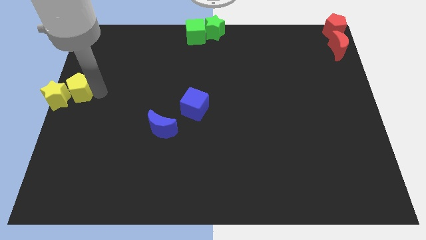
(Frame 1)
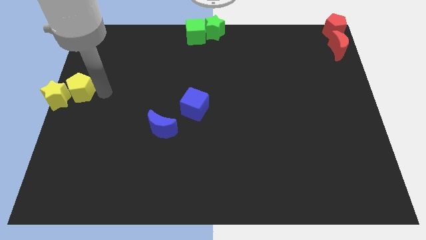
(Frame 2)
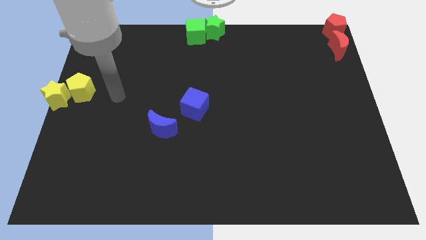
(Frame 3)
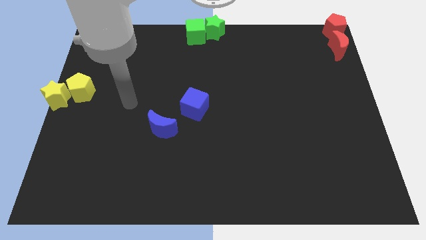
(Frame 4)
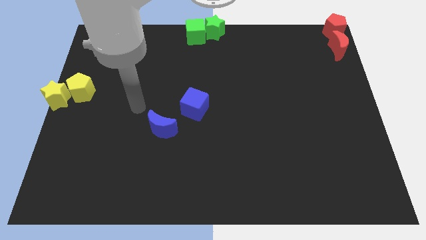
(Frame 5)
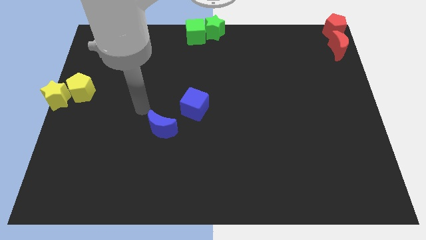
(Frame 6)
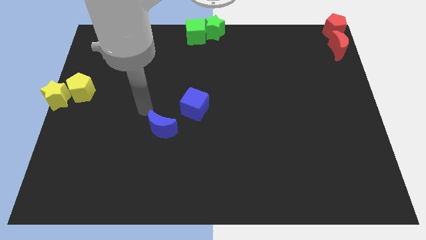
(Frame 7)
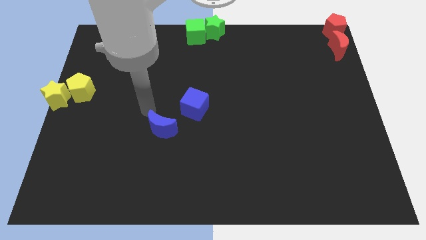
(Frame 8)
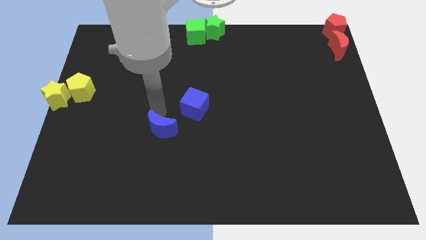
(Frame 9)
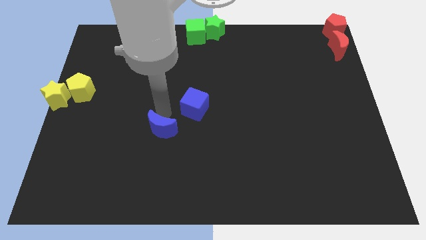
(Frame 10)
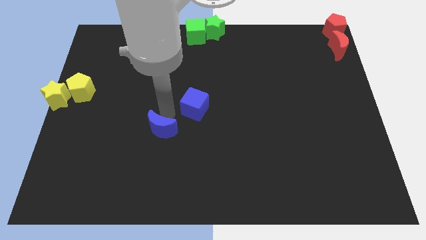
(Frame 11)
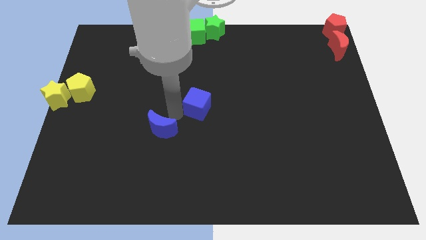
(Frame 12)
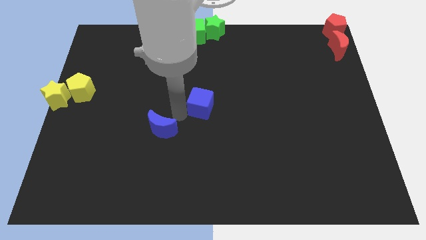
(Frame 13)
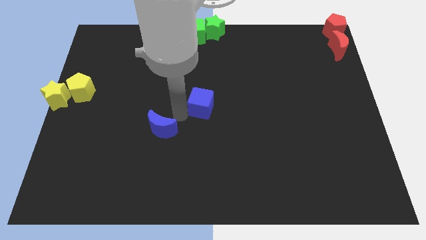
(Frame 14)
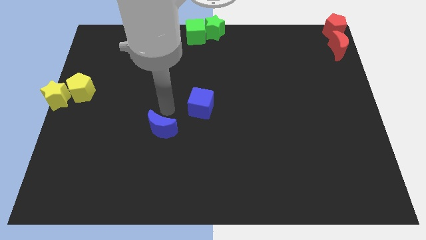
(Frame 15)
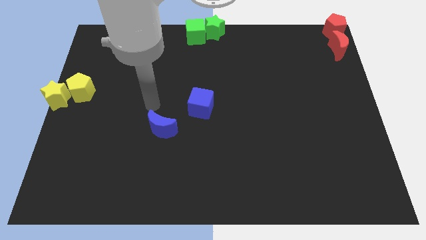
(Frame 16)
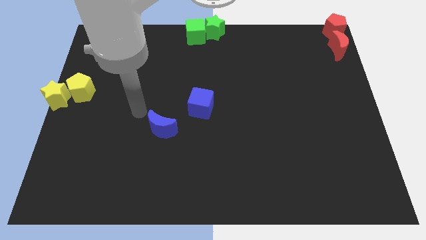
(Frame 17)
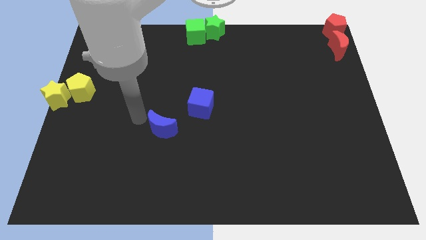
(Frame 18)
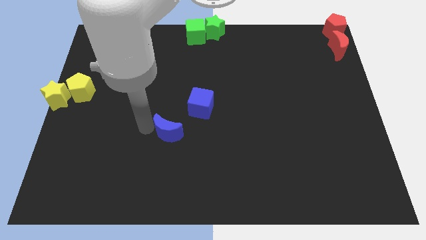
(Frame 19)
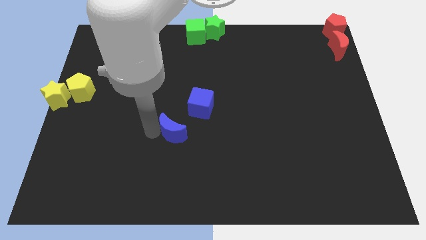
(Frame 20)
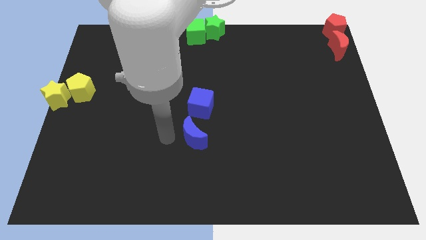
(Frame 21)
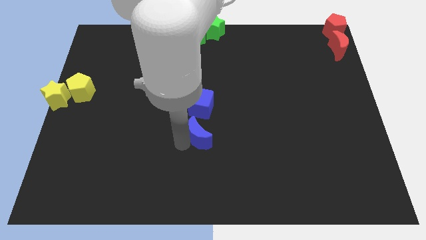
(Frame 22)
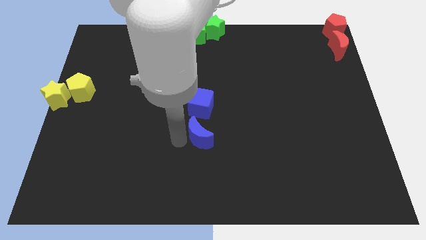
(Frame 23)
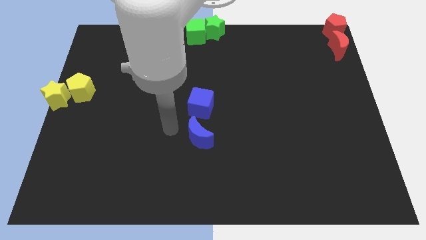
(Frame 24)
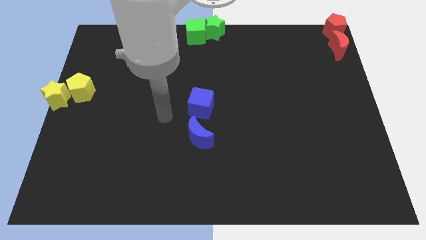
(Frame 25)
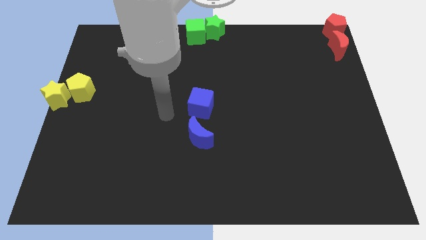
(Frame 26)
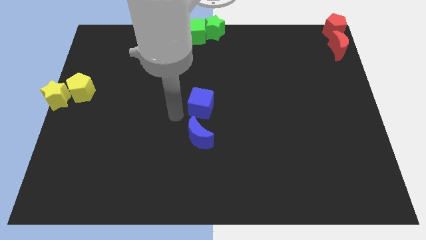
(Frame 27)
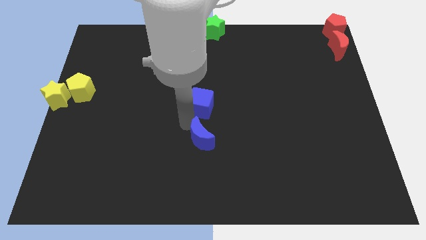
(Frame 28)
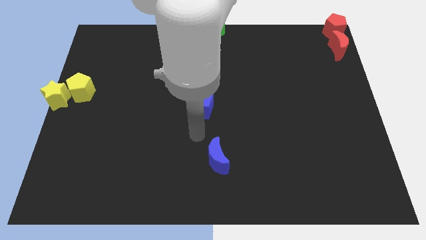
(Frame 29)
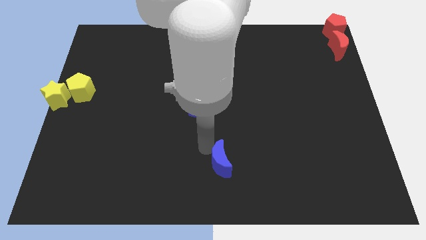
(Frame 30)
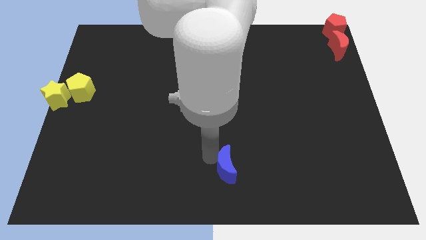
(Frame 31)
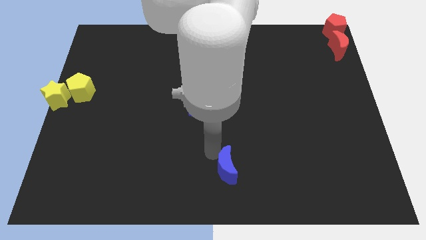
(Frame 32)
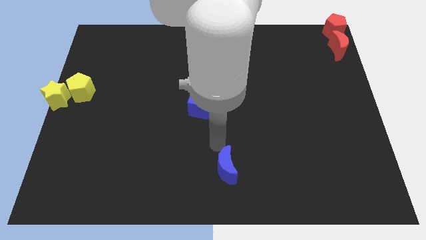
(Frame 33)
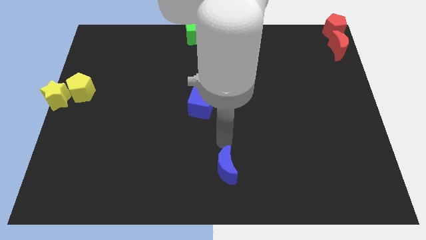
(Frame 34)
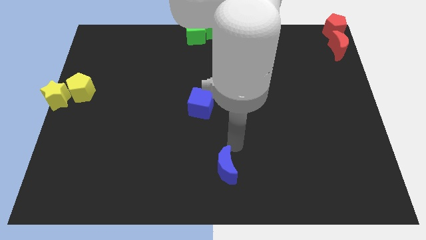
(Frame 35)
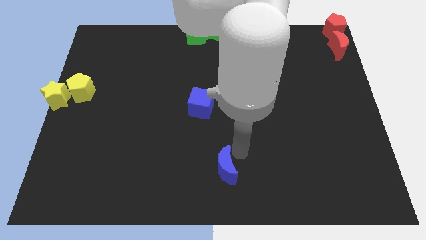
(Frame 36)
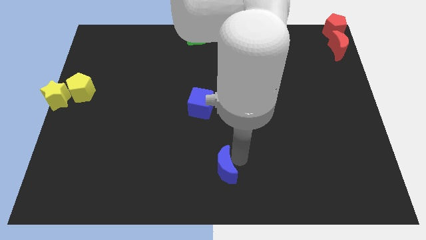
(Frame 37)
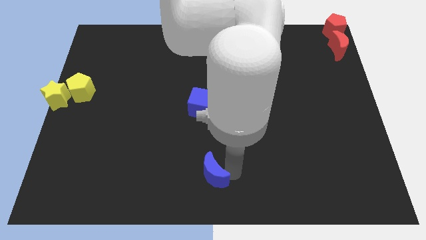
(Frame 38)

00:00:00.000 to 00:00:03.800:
drag the blue moon vertically below the blue cube

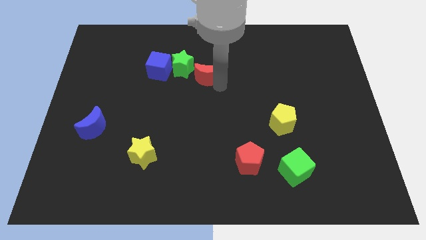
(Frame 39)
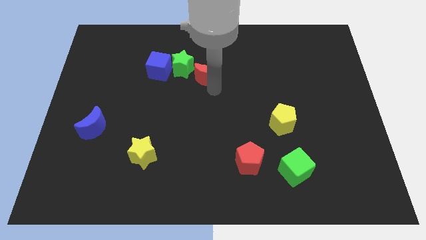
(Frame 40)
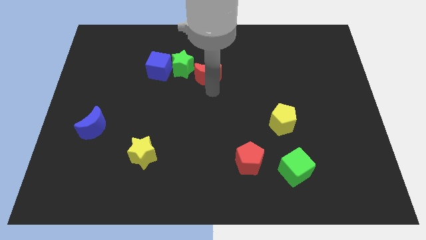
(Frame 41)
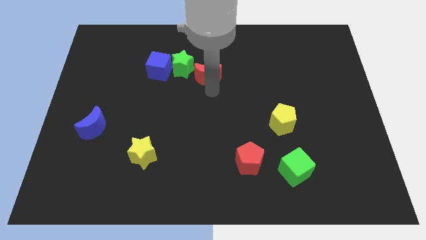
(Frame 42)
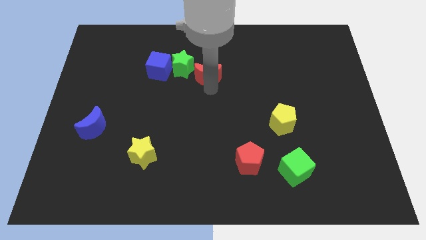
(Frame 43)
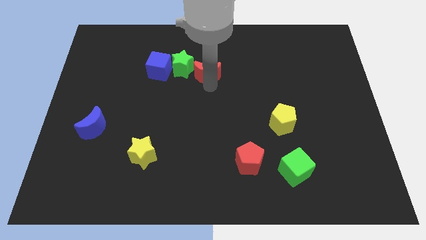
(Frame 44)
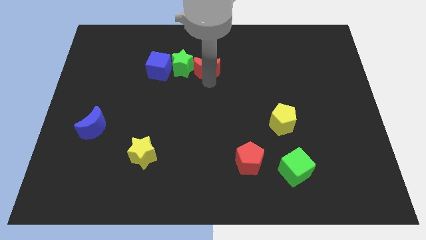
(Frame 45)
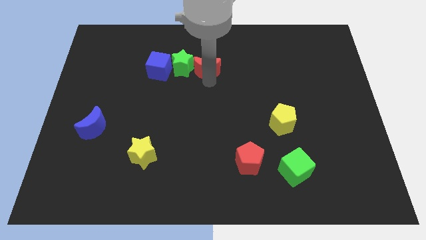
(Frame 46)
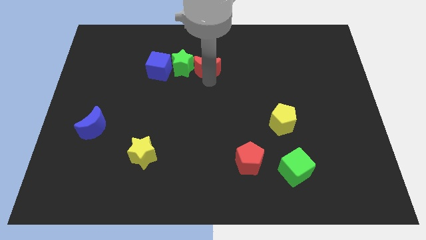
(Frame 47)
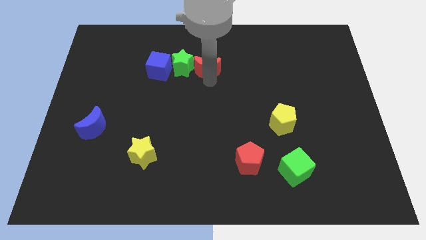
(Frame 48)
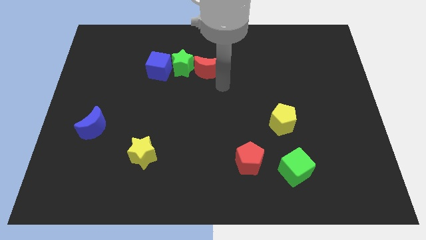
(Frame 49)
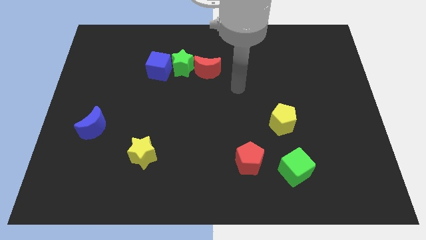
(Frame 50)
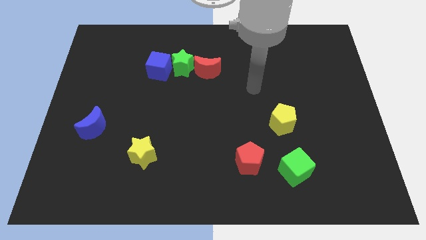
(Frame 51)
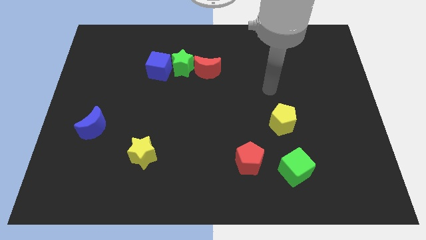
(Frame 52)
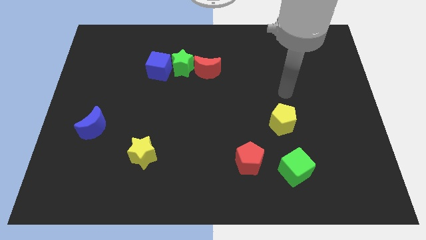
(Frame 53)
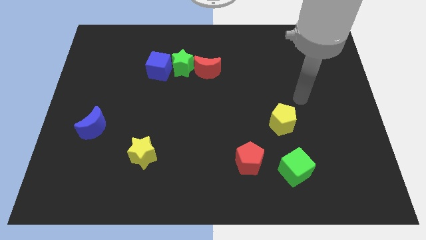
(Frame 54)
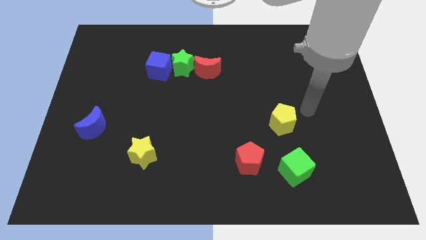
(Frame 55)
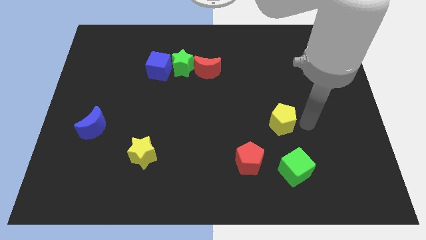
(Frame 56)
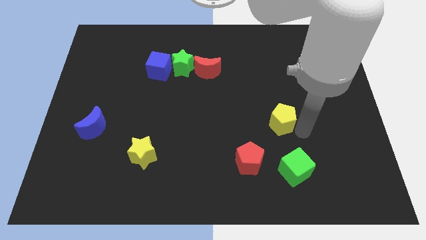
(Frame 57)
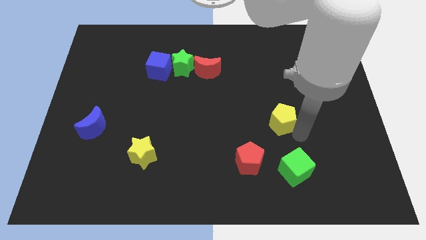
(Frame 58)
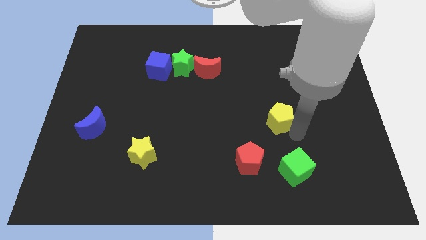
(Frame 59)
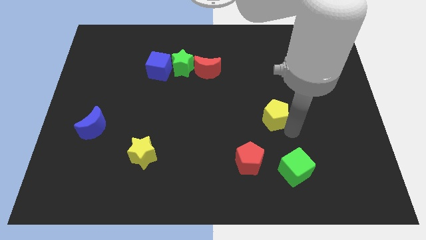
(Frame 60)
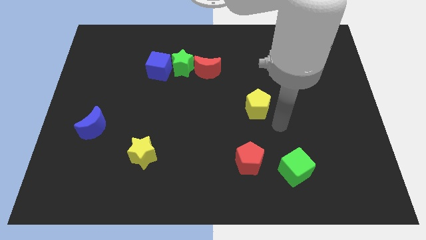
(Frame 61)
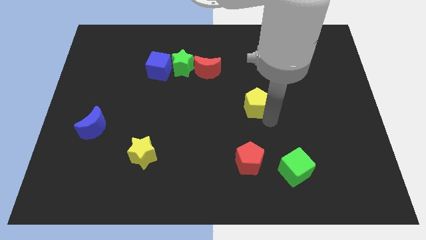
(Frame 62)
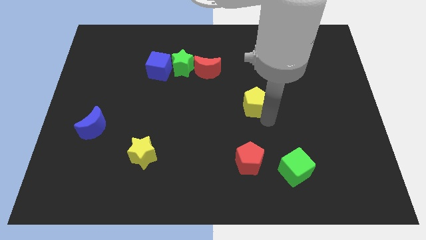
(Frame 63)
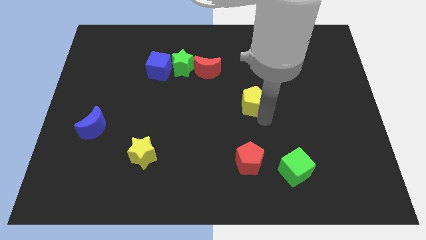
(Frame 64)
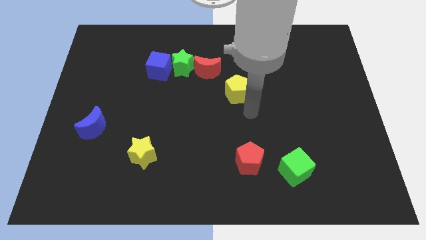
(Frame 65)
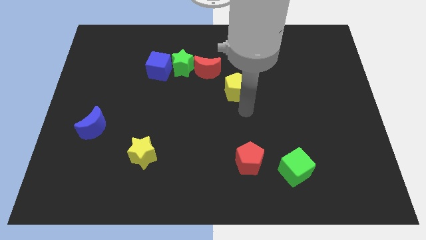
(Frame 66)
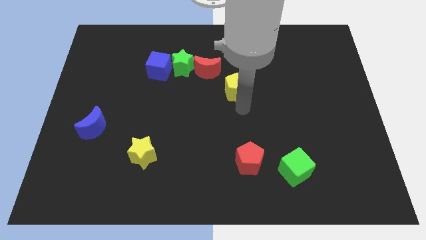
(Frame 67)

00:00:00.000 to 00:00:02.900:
drag the yellow pentagon above the red pentagon

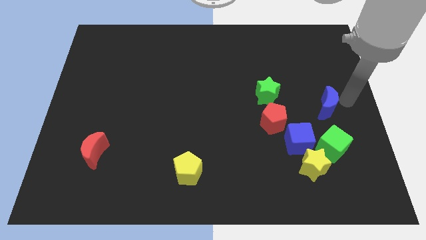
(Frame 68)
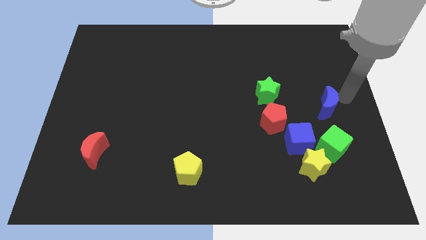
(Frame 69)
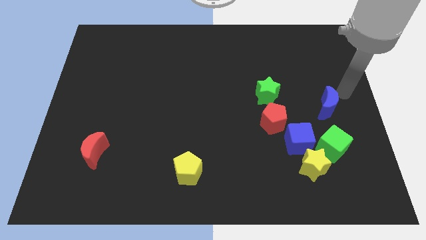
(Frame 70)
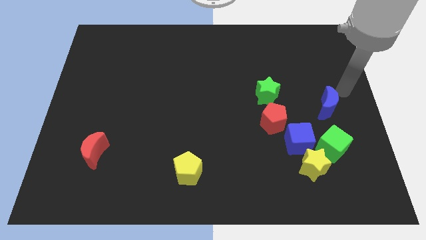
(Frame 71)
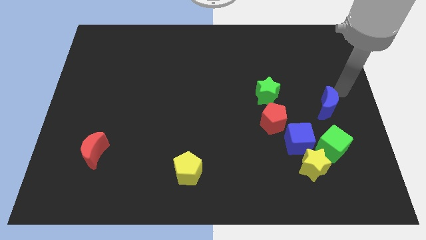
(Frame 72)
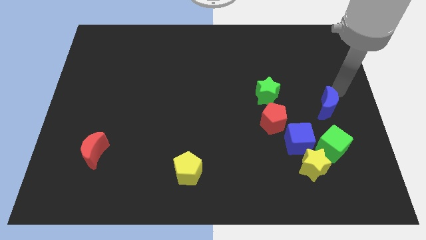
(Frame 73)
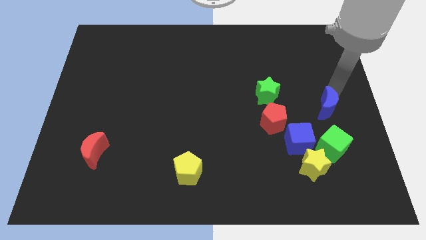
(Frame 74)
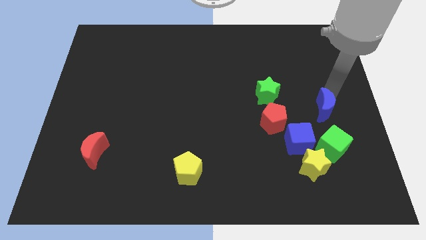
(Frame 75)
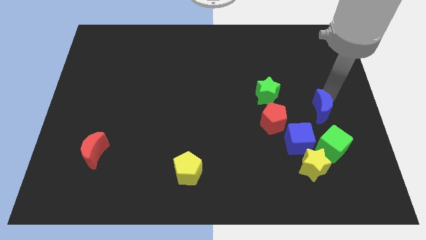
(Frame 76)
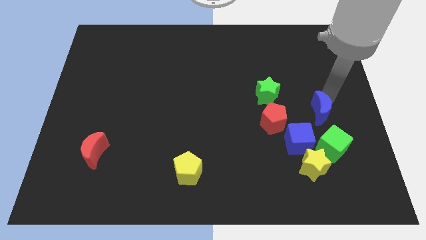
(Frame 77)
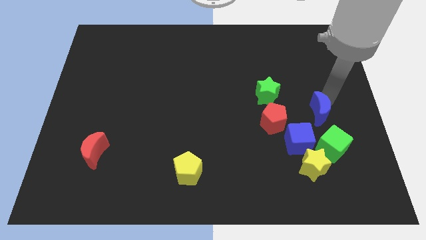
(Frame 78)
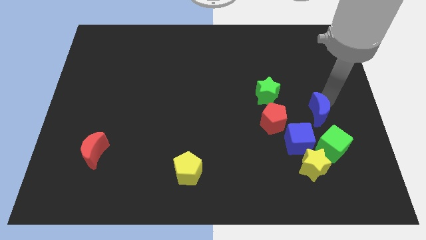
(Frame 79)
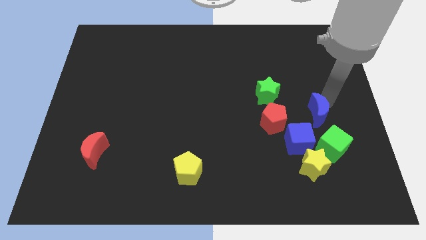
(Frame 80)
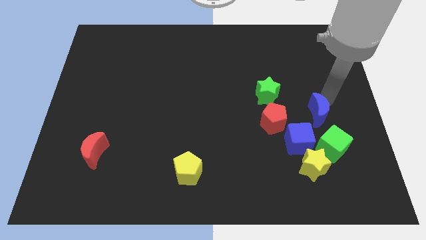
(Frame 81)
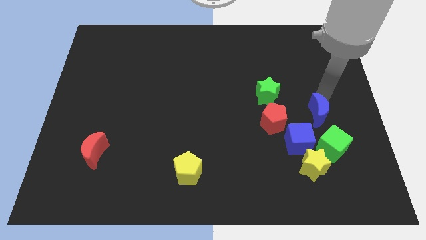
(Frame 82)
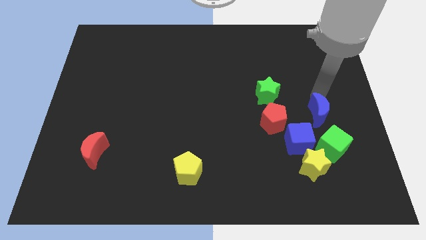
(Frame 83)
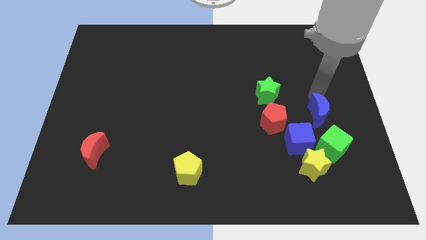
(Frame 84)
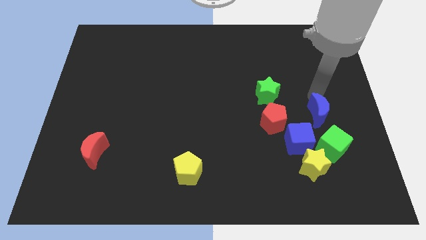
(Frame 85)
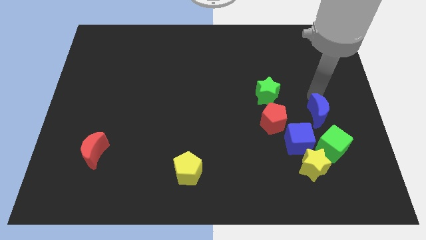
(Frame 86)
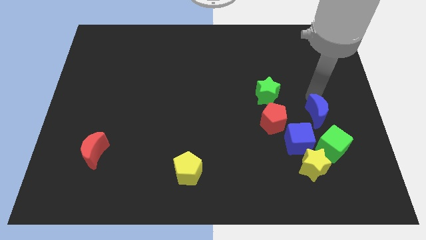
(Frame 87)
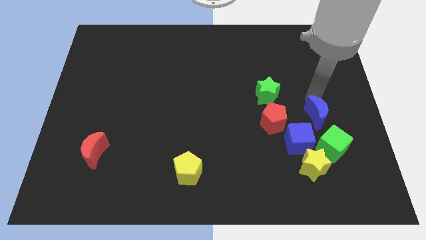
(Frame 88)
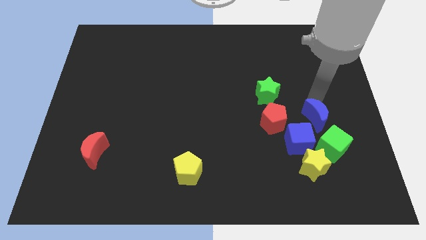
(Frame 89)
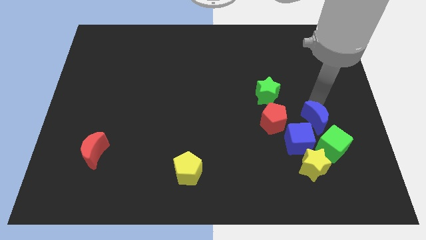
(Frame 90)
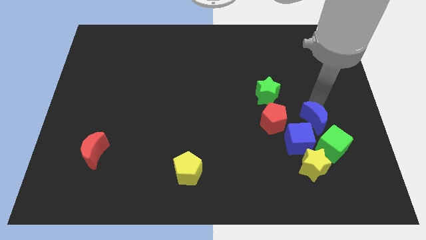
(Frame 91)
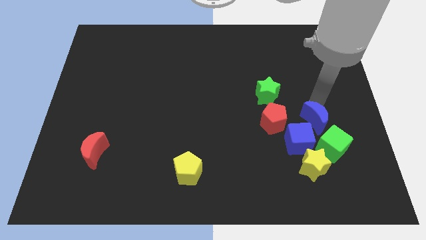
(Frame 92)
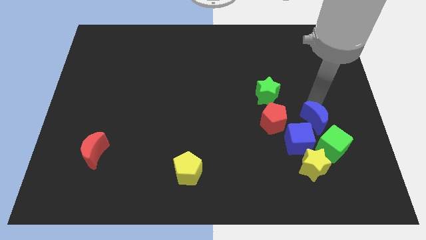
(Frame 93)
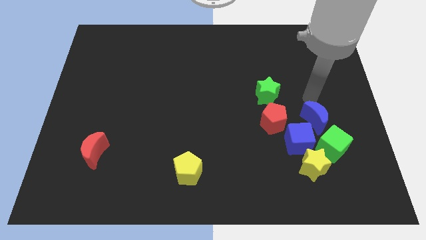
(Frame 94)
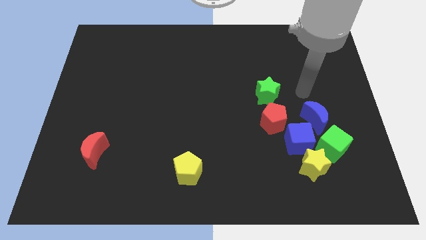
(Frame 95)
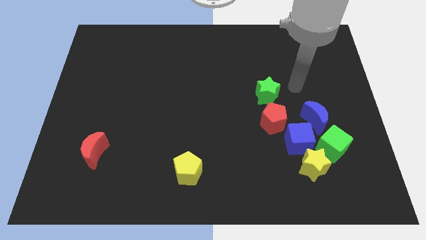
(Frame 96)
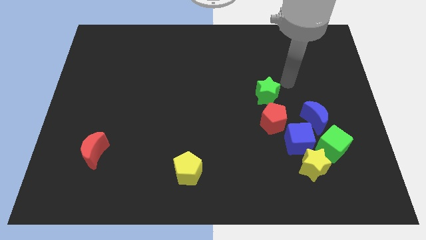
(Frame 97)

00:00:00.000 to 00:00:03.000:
move the blue moon on top right of the blue cube
